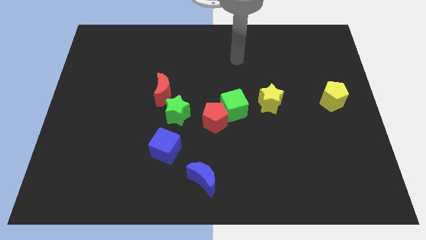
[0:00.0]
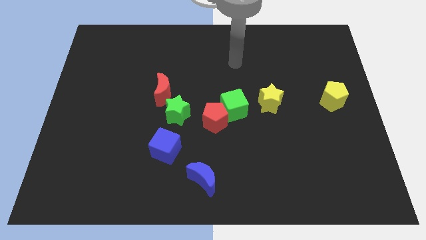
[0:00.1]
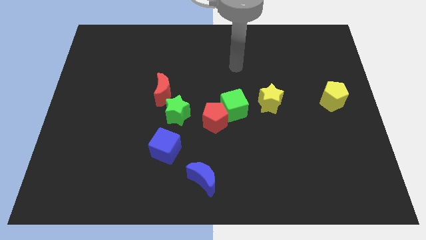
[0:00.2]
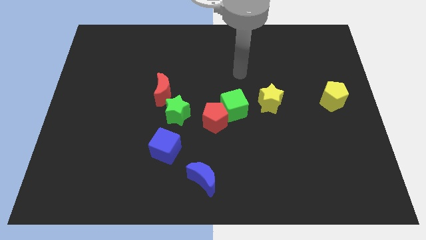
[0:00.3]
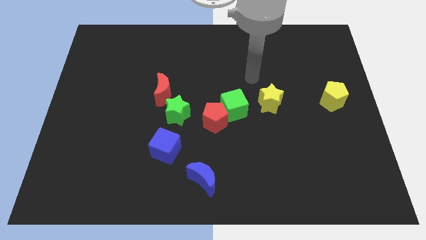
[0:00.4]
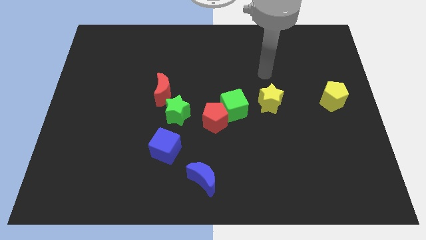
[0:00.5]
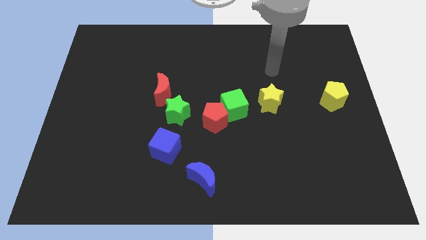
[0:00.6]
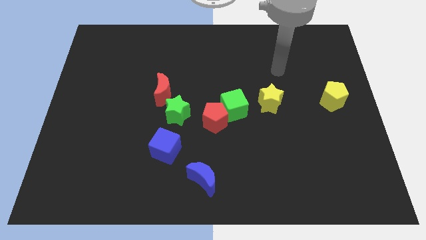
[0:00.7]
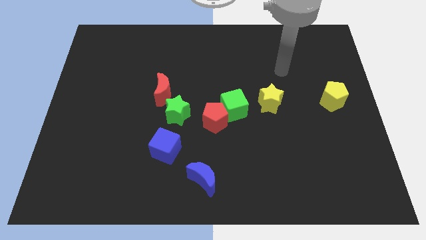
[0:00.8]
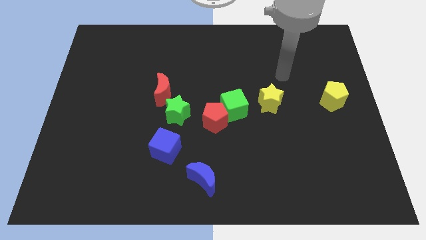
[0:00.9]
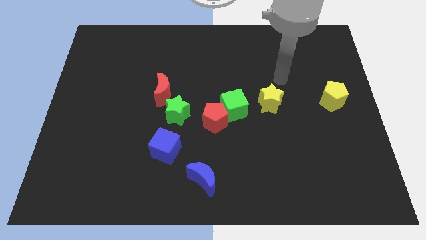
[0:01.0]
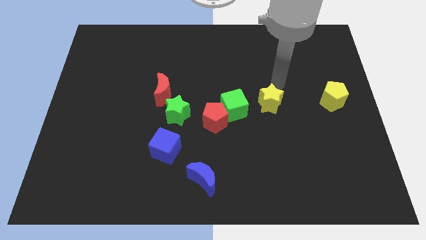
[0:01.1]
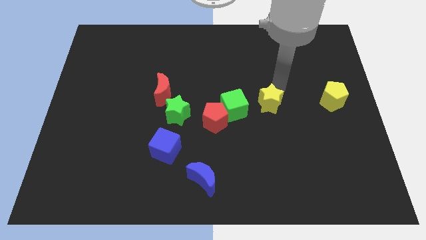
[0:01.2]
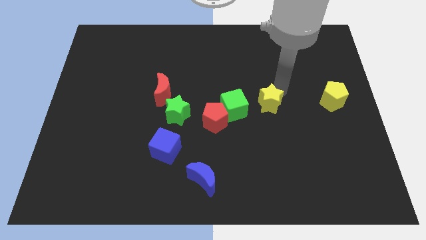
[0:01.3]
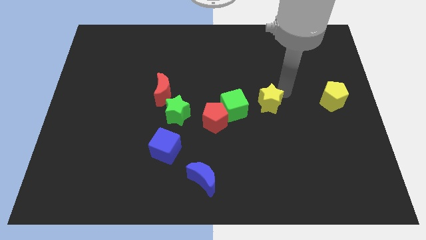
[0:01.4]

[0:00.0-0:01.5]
go near the yellow star

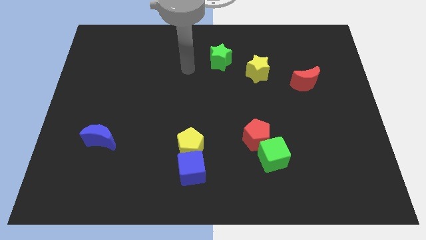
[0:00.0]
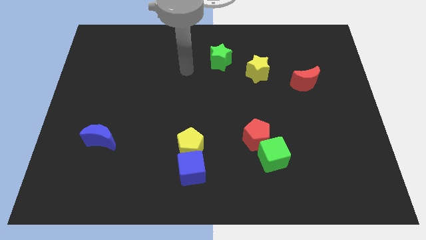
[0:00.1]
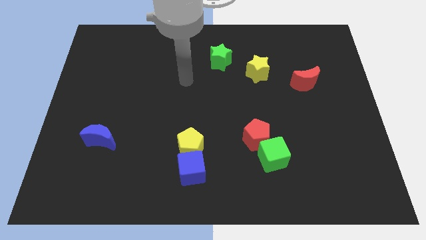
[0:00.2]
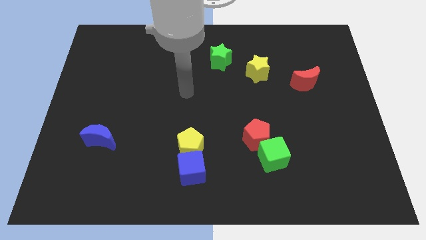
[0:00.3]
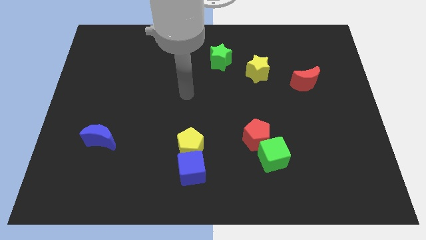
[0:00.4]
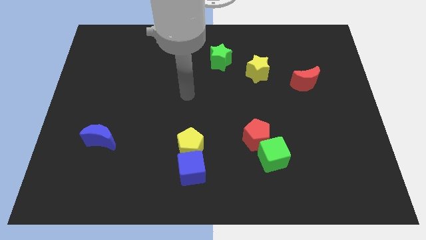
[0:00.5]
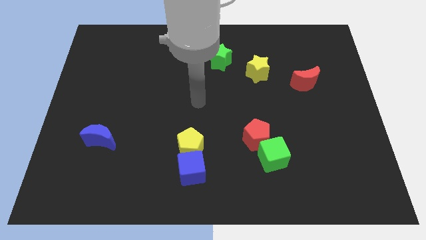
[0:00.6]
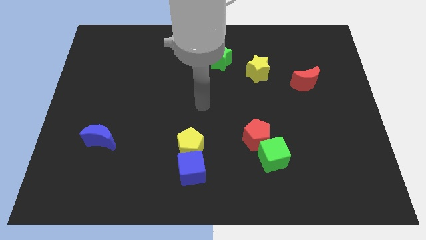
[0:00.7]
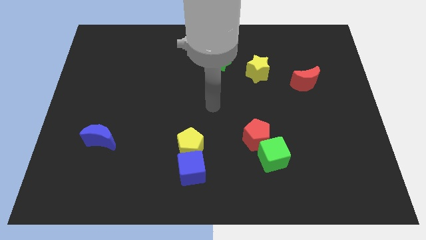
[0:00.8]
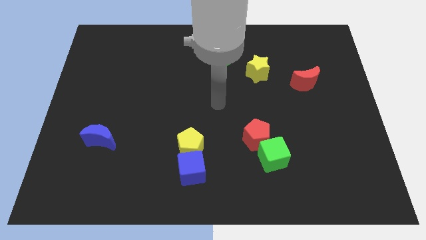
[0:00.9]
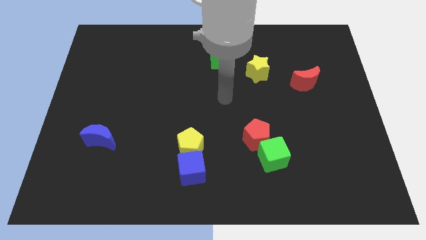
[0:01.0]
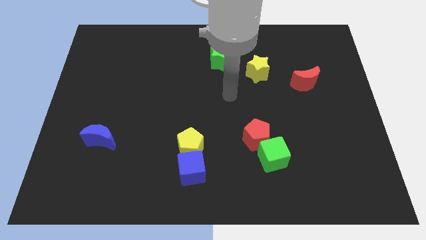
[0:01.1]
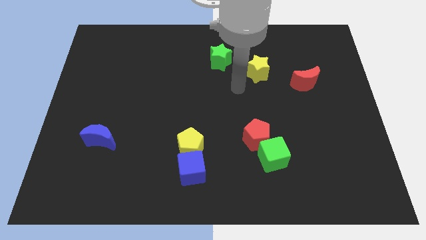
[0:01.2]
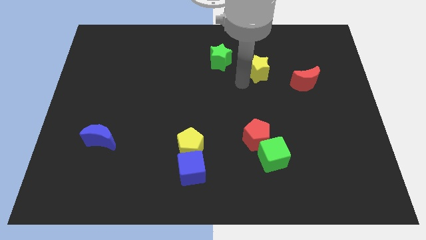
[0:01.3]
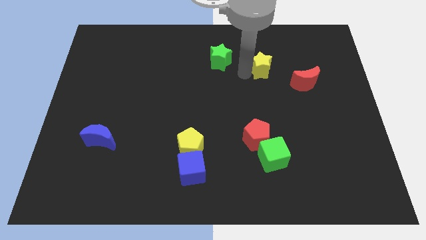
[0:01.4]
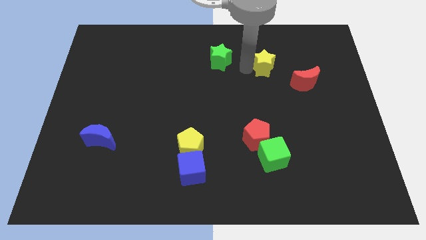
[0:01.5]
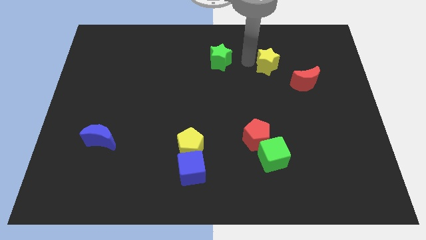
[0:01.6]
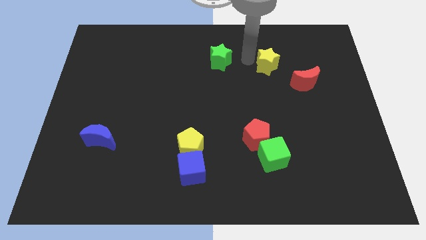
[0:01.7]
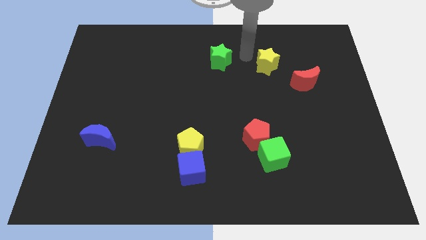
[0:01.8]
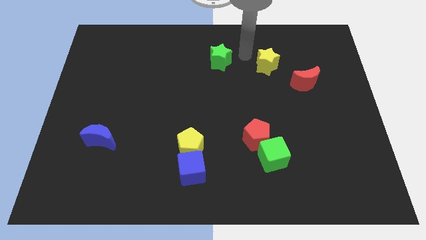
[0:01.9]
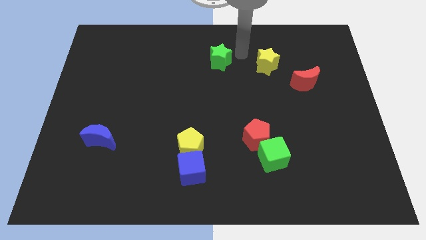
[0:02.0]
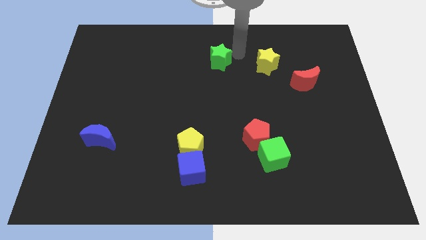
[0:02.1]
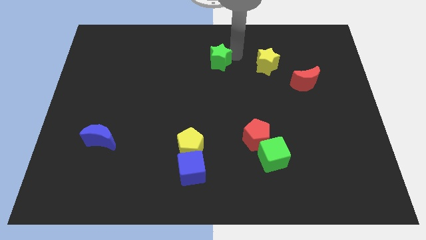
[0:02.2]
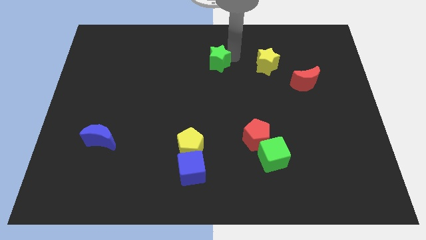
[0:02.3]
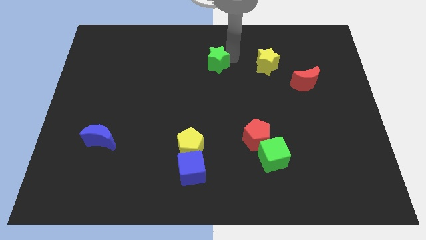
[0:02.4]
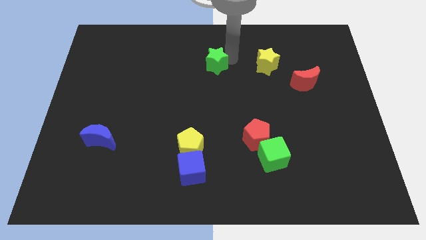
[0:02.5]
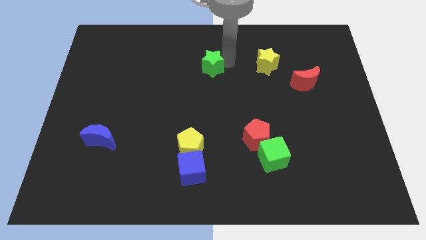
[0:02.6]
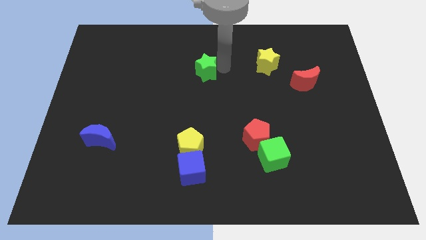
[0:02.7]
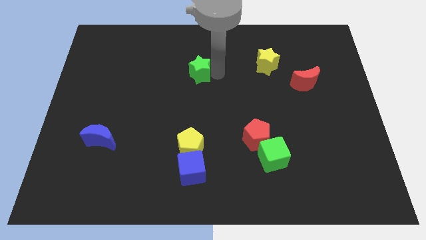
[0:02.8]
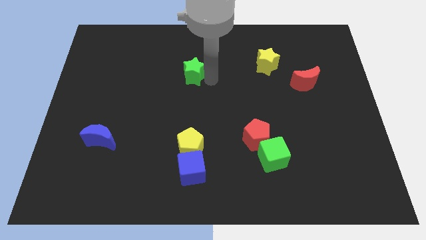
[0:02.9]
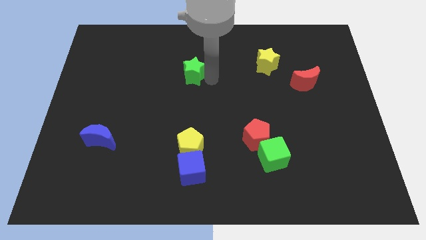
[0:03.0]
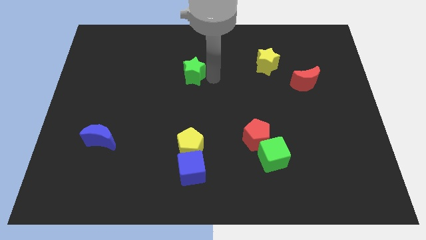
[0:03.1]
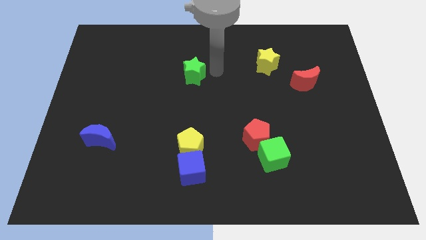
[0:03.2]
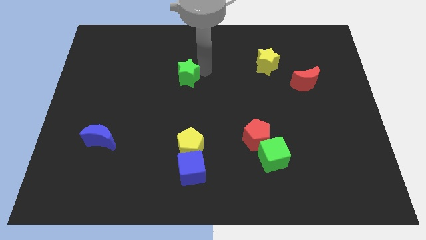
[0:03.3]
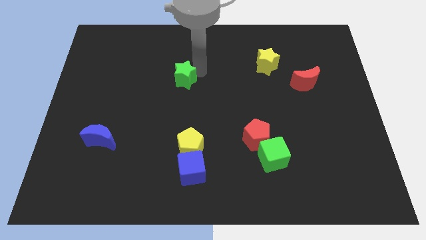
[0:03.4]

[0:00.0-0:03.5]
put the green star above the yellow pentagon

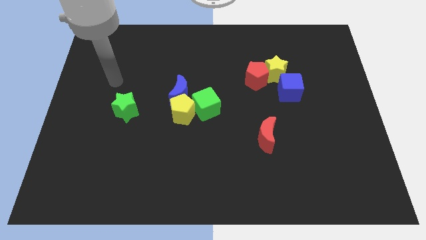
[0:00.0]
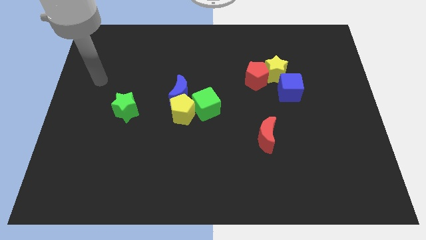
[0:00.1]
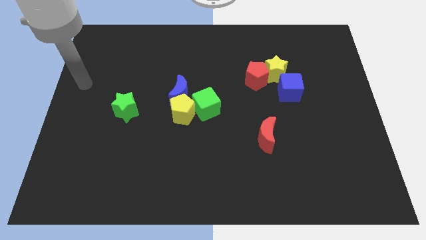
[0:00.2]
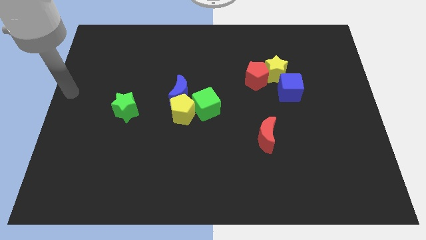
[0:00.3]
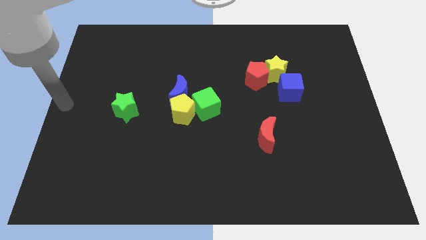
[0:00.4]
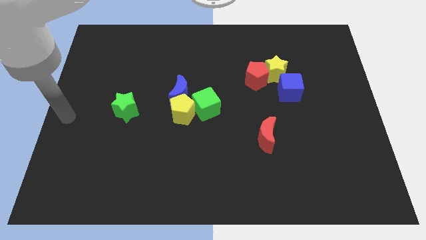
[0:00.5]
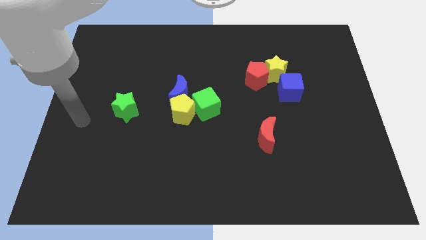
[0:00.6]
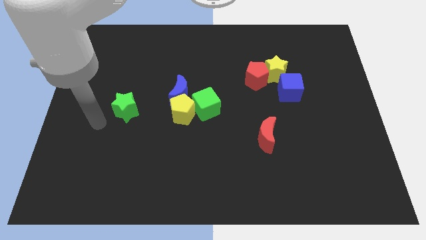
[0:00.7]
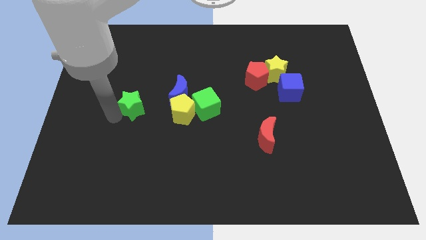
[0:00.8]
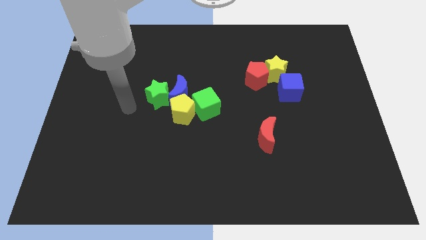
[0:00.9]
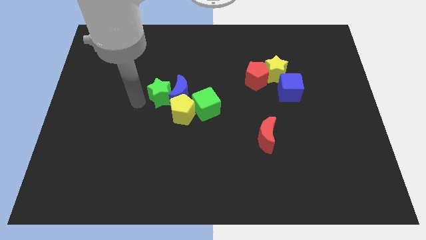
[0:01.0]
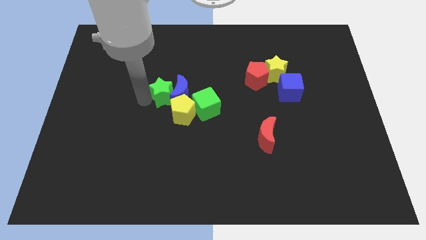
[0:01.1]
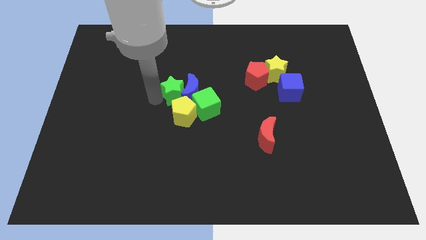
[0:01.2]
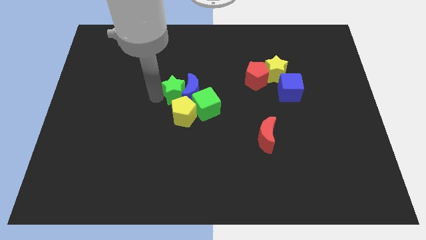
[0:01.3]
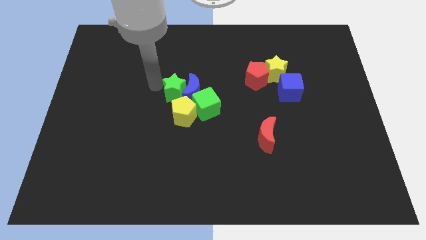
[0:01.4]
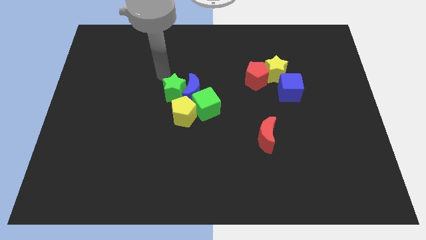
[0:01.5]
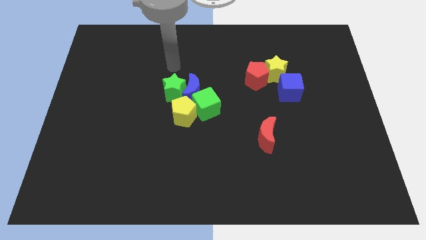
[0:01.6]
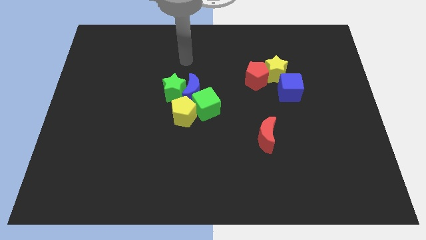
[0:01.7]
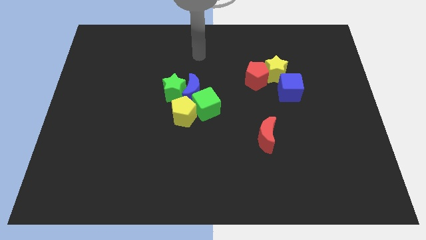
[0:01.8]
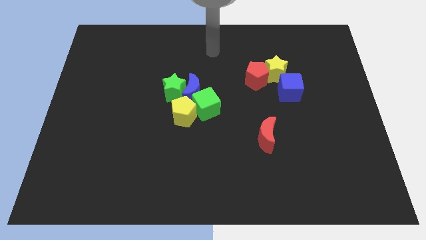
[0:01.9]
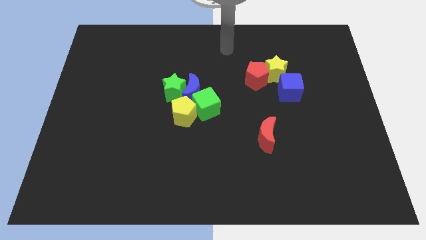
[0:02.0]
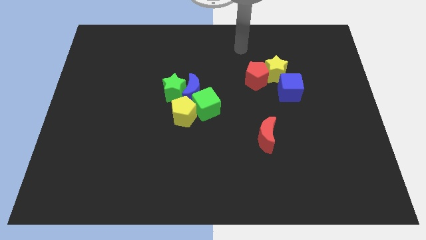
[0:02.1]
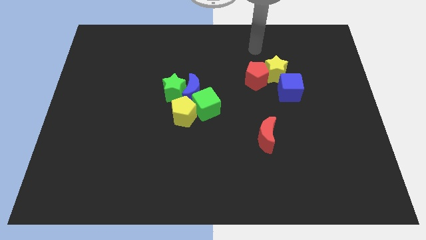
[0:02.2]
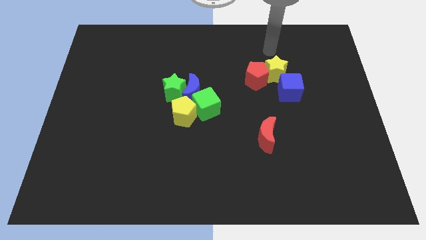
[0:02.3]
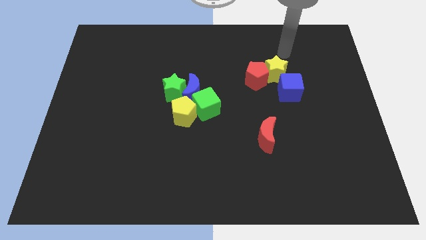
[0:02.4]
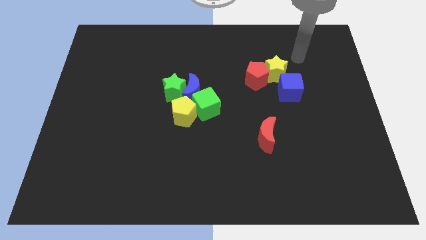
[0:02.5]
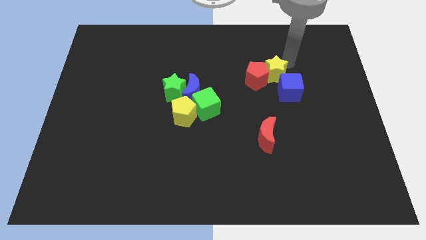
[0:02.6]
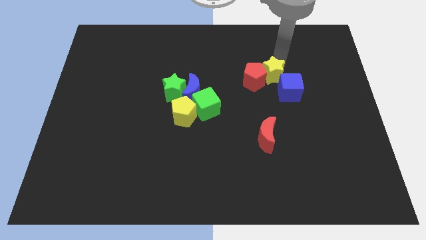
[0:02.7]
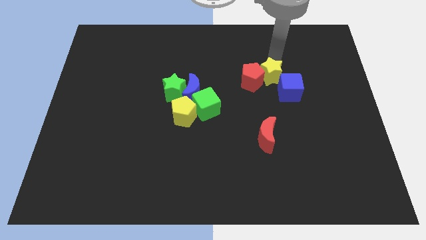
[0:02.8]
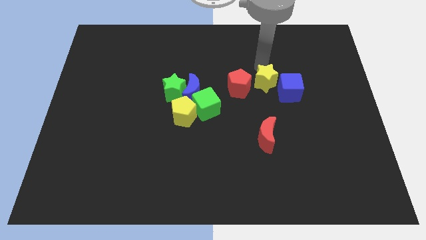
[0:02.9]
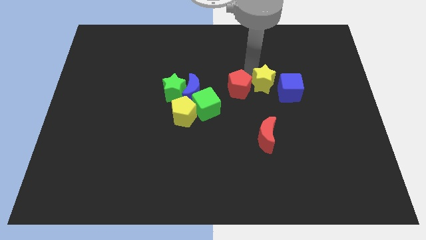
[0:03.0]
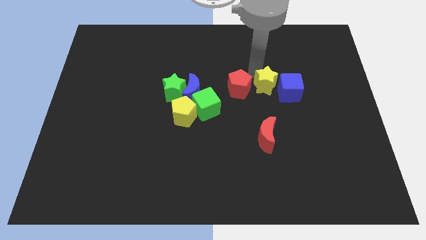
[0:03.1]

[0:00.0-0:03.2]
push the green star into the left of blue crescent

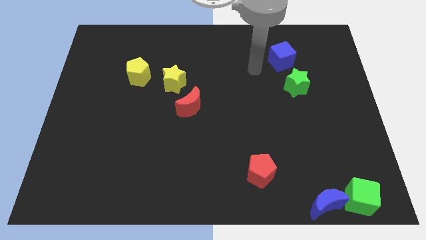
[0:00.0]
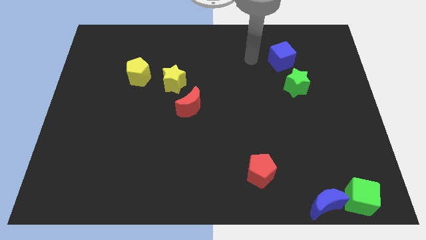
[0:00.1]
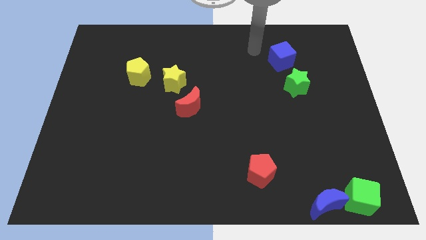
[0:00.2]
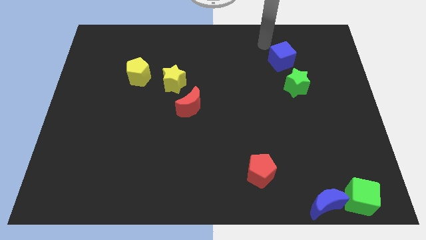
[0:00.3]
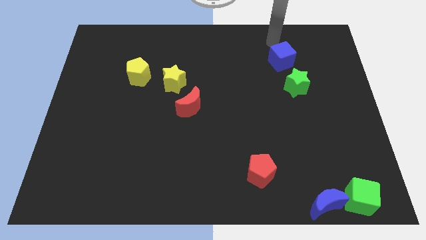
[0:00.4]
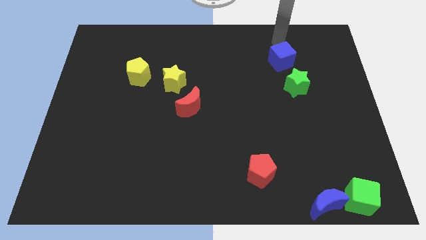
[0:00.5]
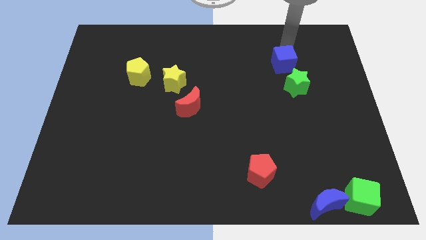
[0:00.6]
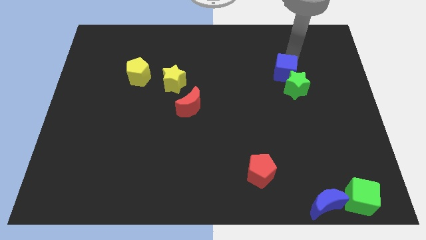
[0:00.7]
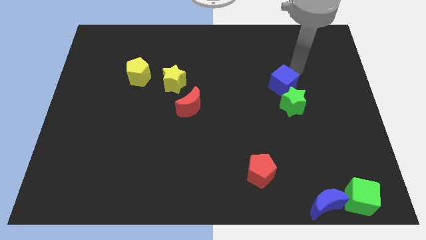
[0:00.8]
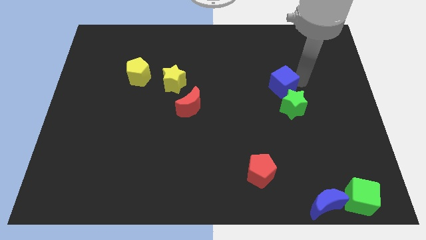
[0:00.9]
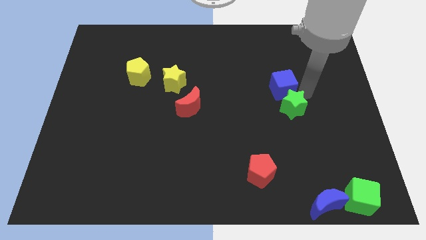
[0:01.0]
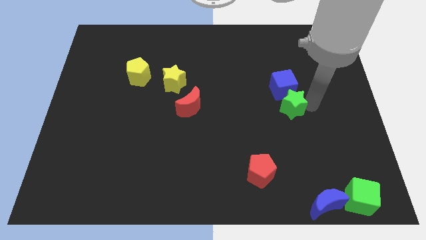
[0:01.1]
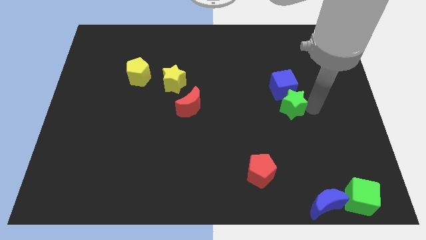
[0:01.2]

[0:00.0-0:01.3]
push blue cube in to the green star
